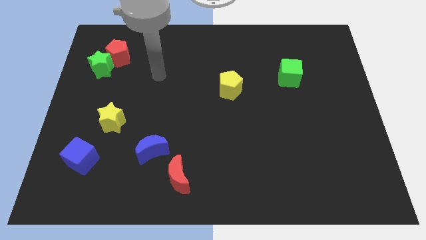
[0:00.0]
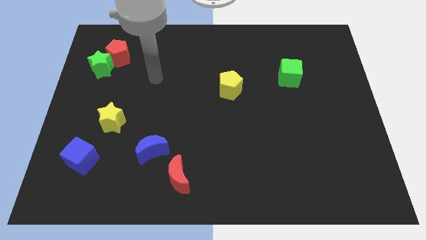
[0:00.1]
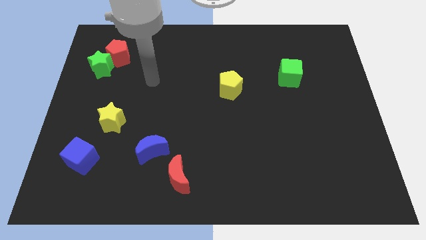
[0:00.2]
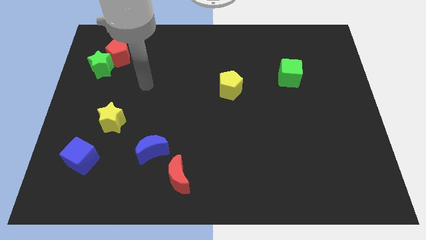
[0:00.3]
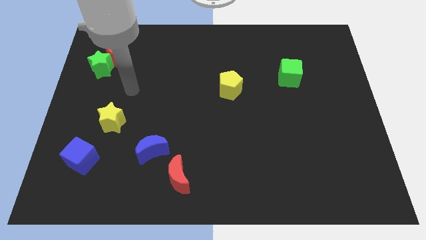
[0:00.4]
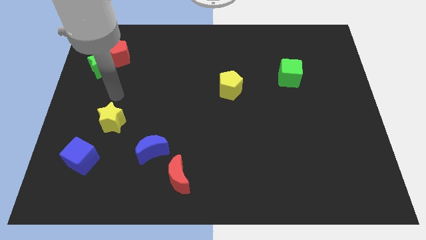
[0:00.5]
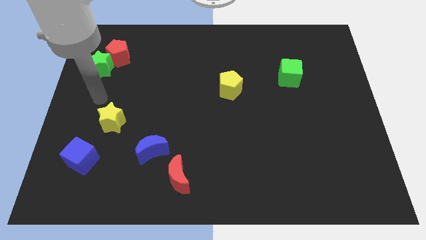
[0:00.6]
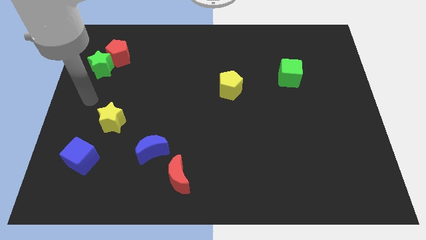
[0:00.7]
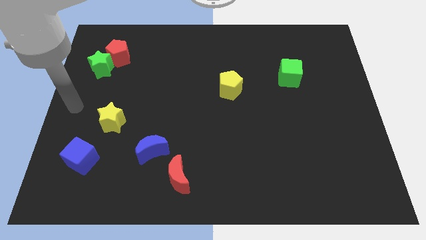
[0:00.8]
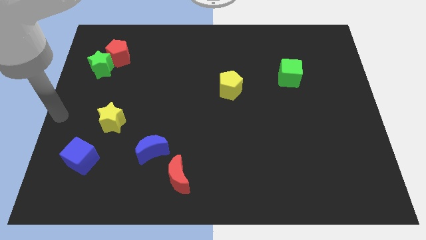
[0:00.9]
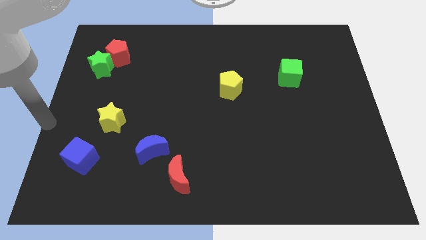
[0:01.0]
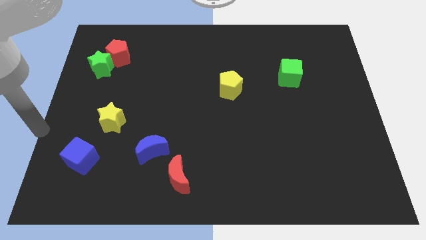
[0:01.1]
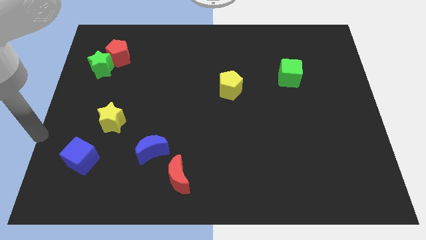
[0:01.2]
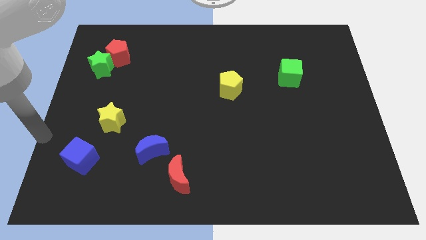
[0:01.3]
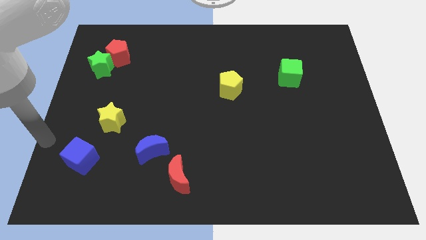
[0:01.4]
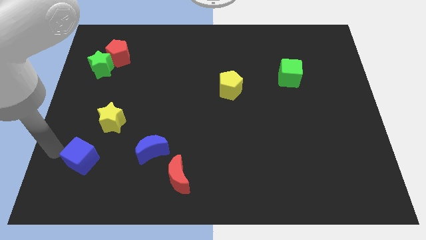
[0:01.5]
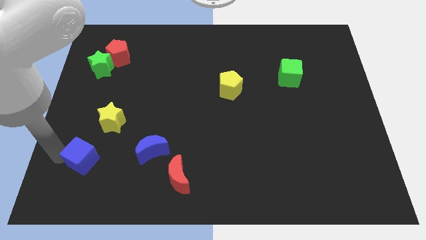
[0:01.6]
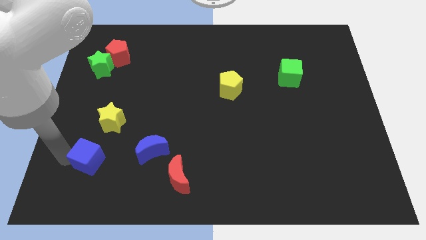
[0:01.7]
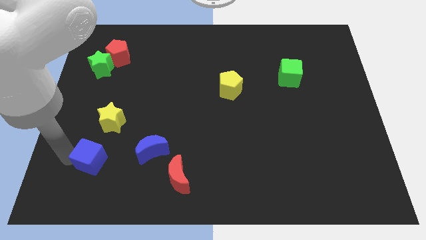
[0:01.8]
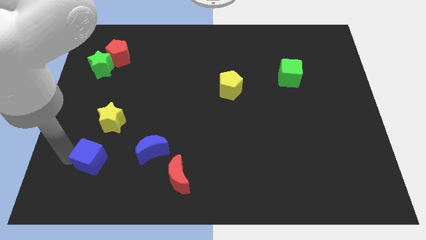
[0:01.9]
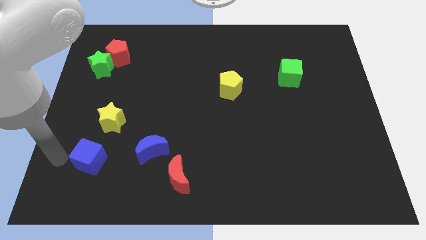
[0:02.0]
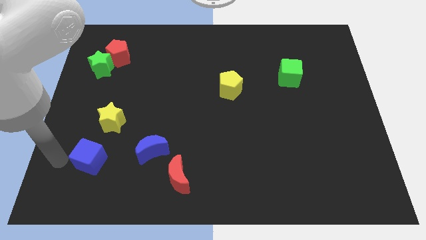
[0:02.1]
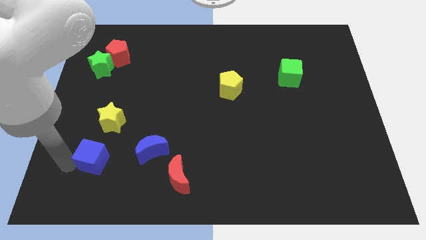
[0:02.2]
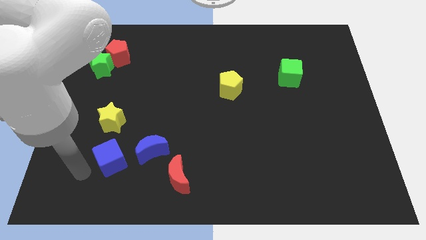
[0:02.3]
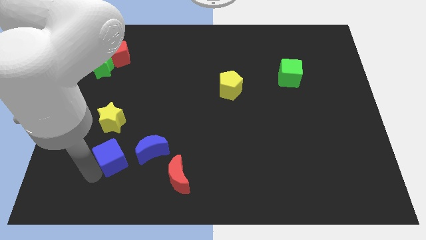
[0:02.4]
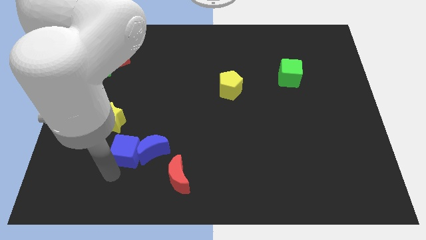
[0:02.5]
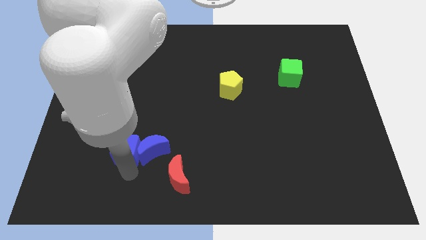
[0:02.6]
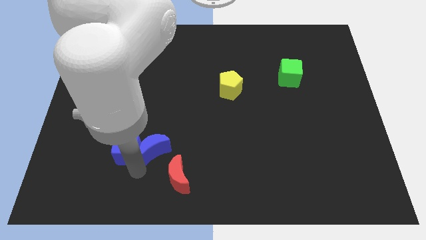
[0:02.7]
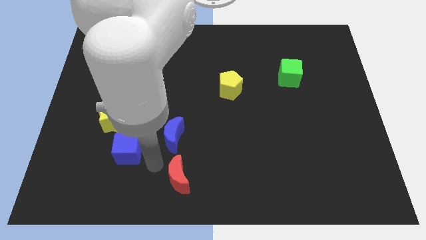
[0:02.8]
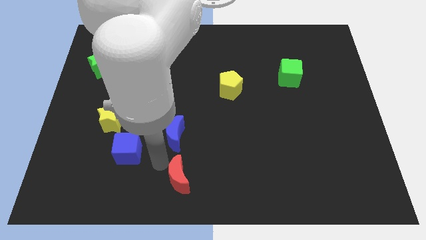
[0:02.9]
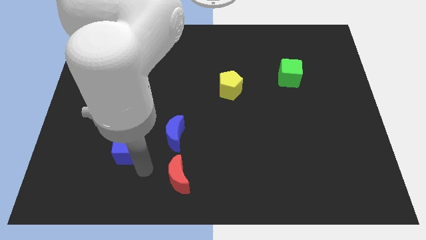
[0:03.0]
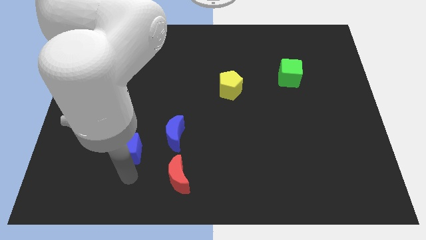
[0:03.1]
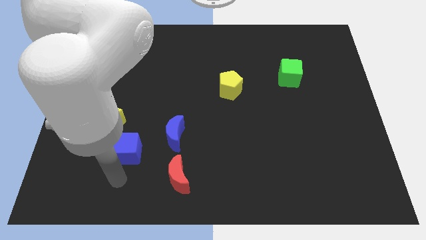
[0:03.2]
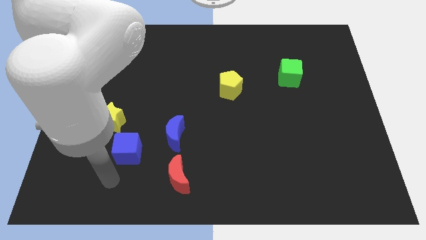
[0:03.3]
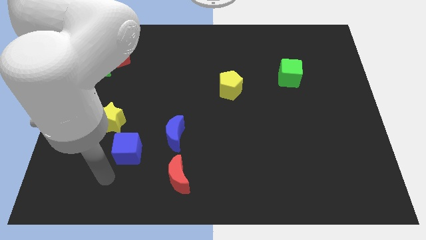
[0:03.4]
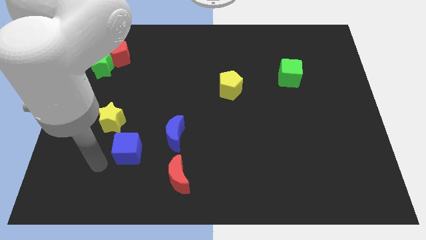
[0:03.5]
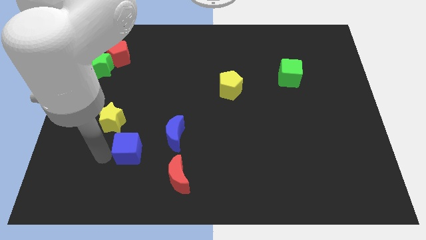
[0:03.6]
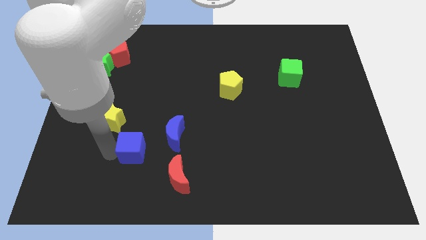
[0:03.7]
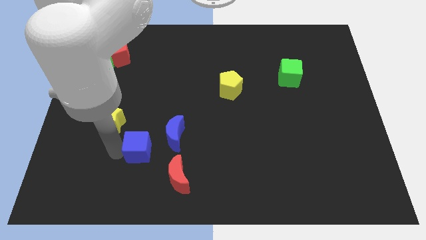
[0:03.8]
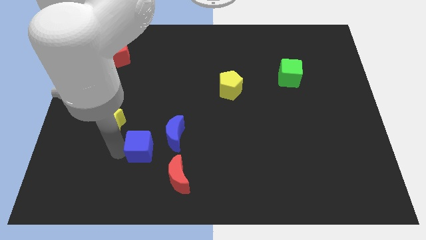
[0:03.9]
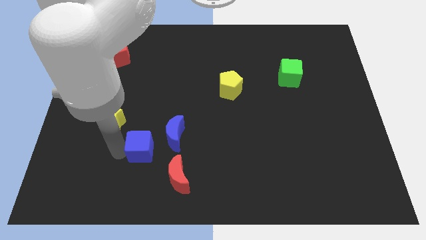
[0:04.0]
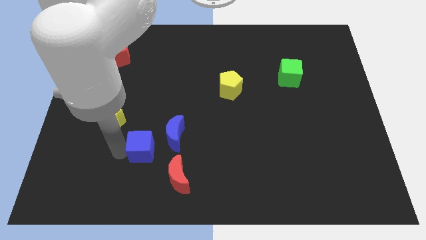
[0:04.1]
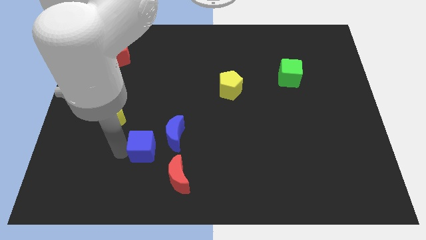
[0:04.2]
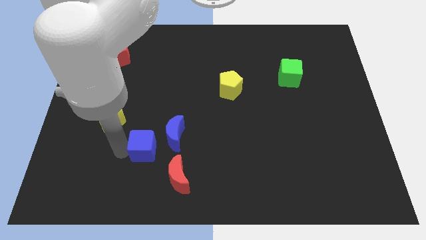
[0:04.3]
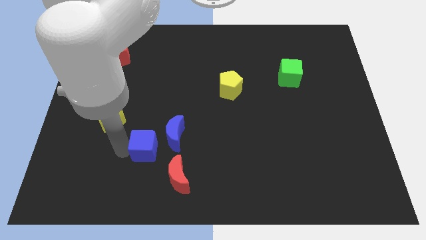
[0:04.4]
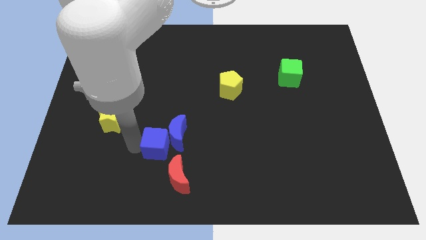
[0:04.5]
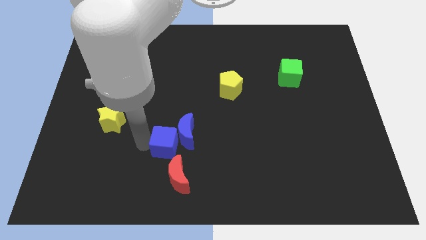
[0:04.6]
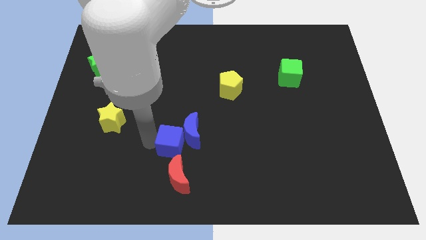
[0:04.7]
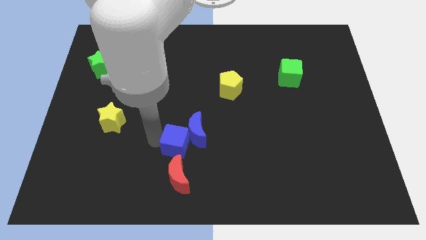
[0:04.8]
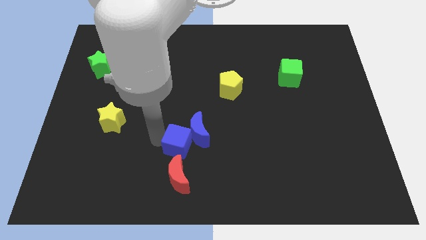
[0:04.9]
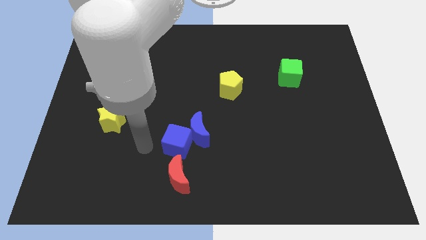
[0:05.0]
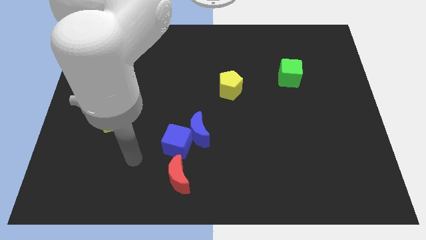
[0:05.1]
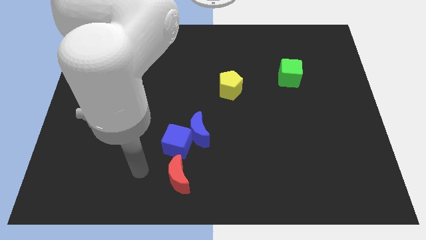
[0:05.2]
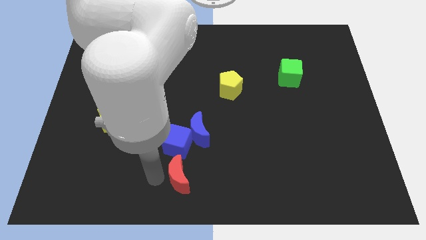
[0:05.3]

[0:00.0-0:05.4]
drag blue cube into the blue moon

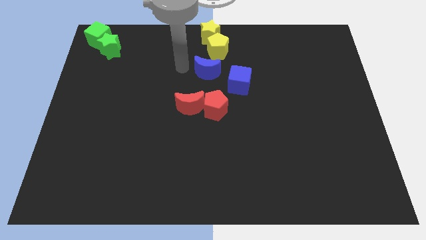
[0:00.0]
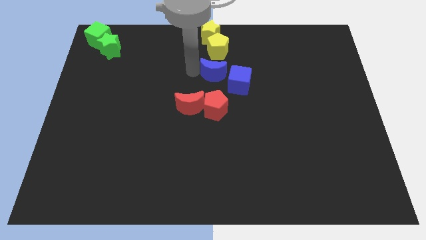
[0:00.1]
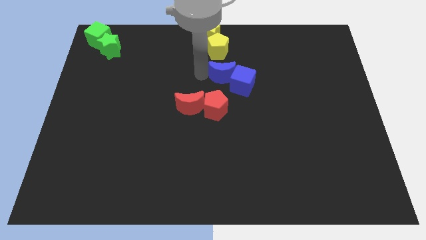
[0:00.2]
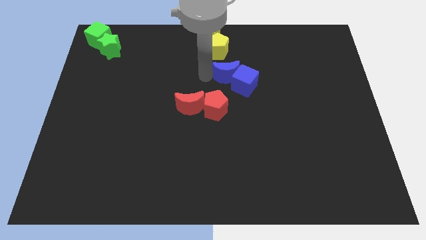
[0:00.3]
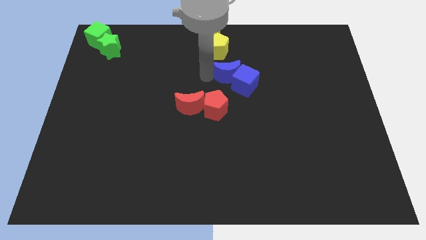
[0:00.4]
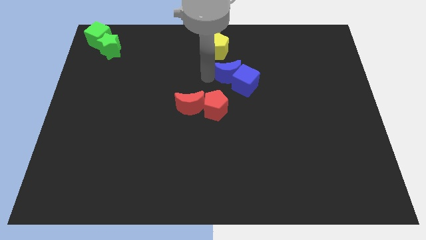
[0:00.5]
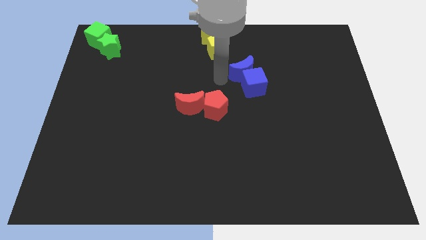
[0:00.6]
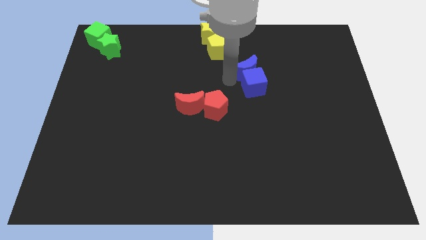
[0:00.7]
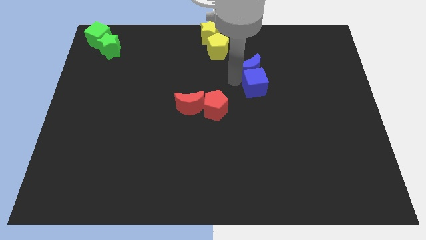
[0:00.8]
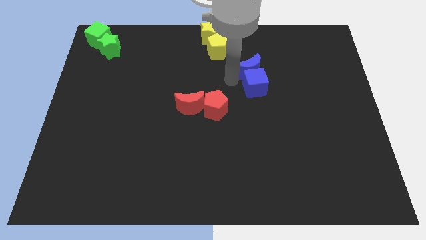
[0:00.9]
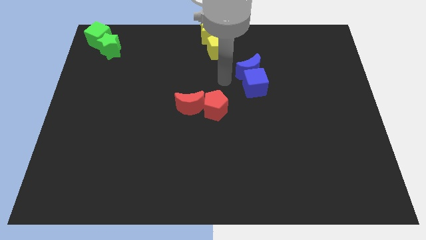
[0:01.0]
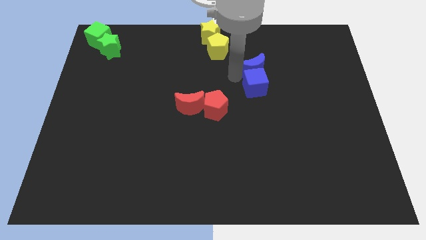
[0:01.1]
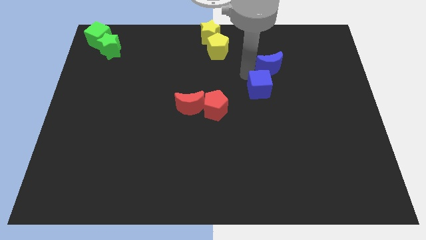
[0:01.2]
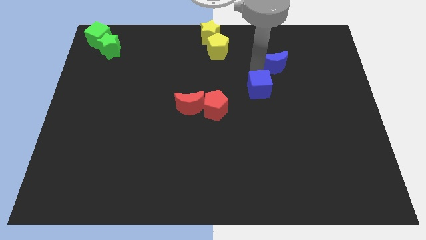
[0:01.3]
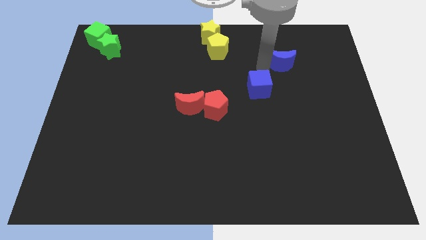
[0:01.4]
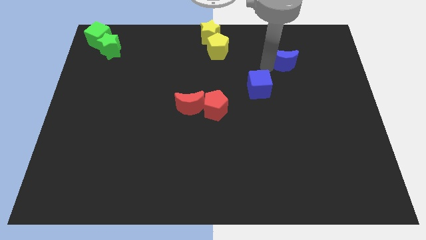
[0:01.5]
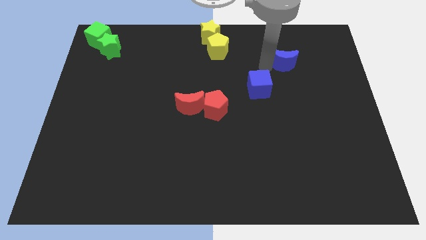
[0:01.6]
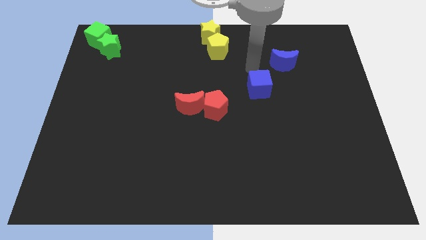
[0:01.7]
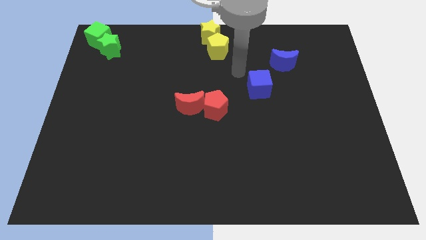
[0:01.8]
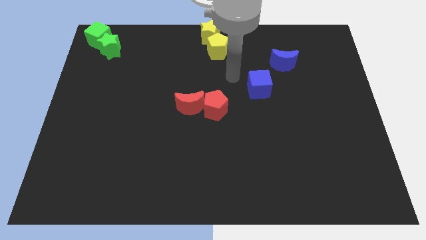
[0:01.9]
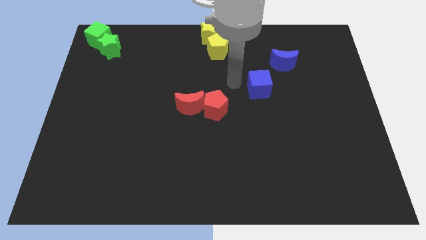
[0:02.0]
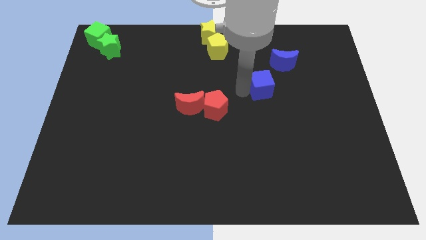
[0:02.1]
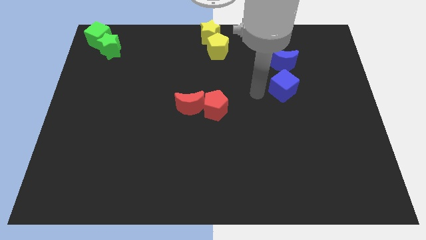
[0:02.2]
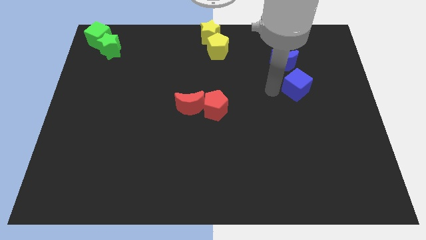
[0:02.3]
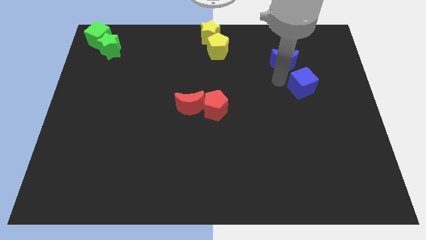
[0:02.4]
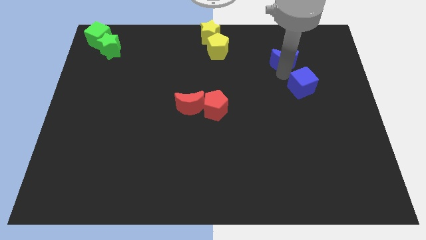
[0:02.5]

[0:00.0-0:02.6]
move the group of blue blocks to the right

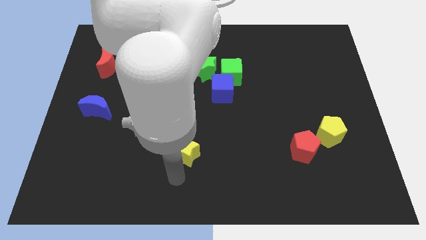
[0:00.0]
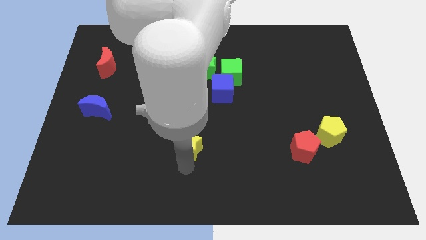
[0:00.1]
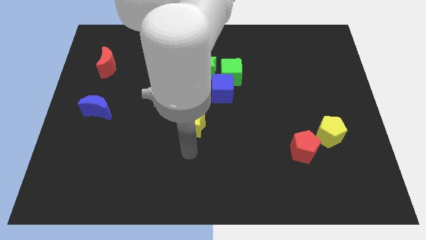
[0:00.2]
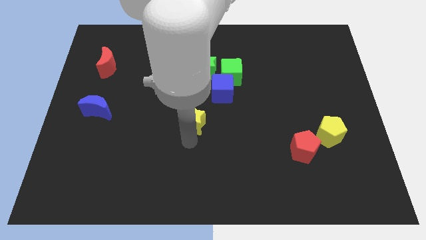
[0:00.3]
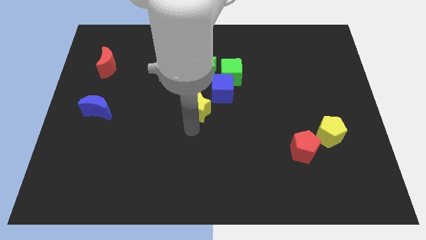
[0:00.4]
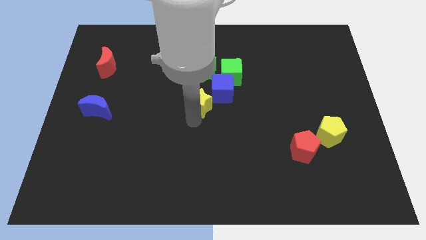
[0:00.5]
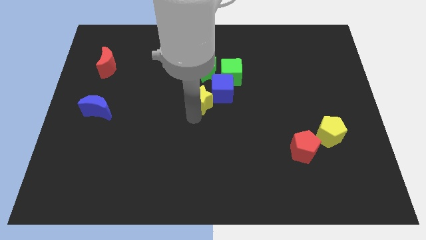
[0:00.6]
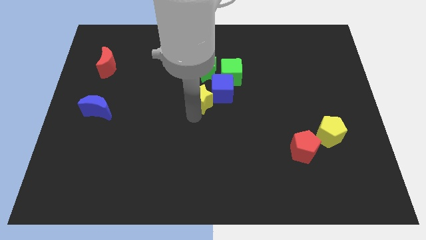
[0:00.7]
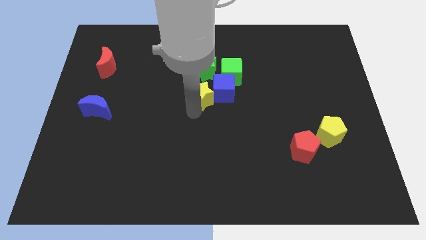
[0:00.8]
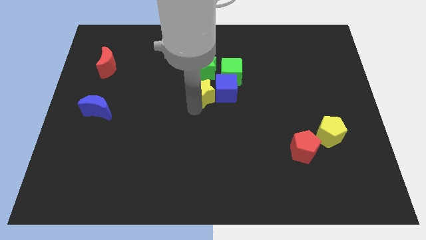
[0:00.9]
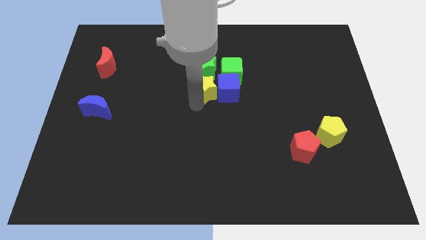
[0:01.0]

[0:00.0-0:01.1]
place yellow star left beside blue cube
